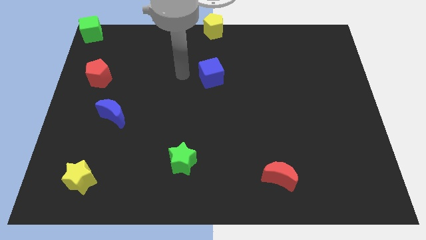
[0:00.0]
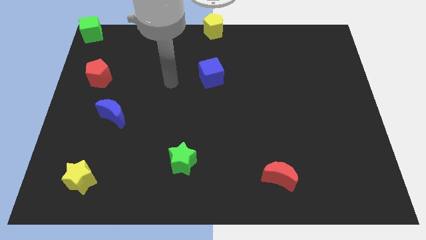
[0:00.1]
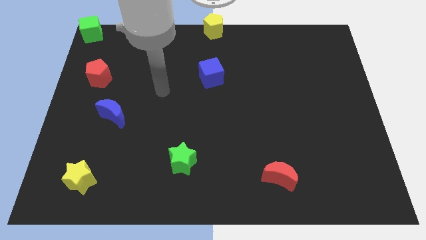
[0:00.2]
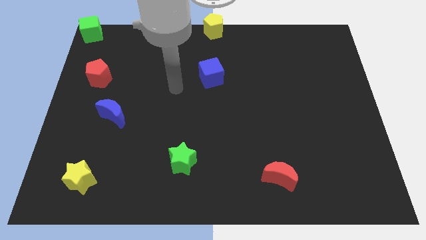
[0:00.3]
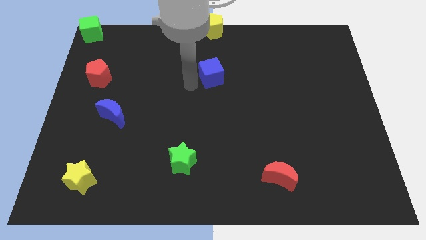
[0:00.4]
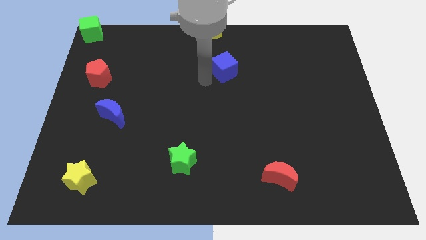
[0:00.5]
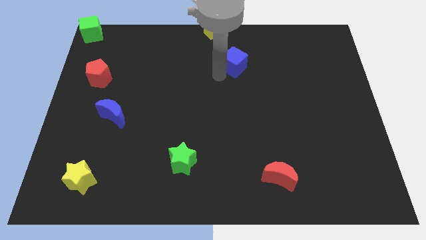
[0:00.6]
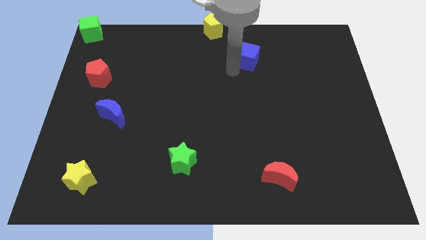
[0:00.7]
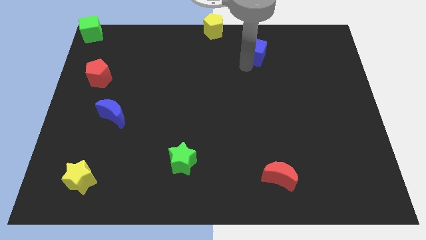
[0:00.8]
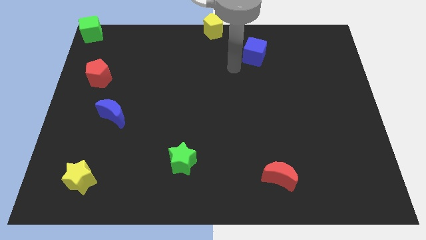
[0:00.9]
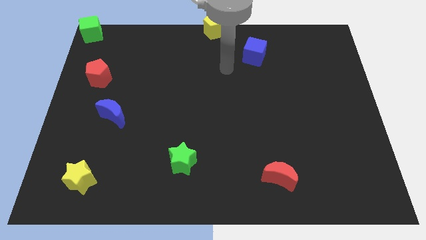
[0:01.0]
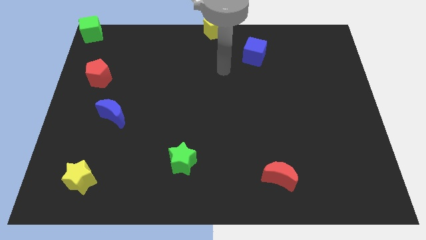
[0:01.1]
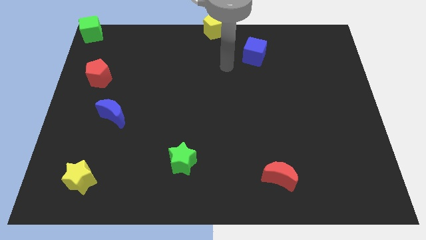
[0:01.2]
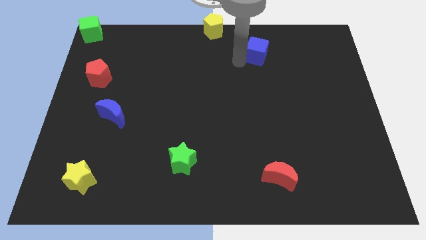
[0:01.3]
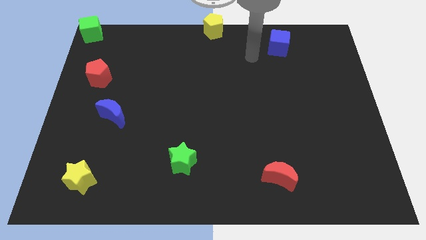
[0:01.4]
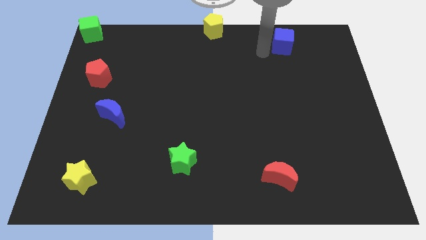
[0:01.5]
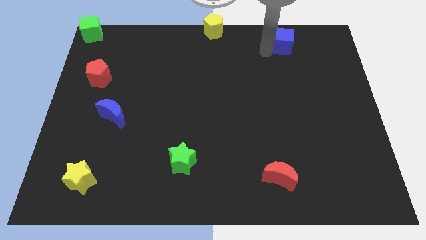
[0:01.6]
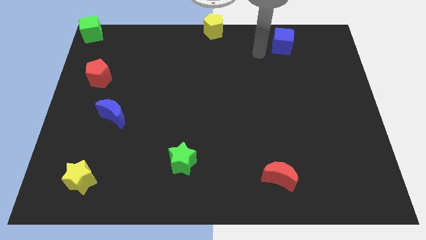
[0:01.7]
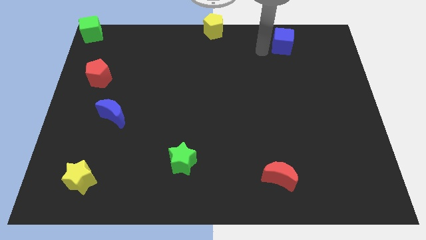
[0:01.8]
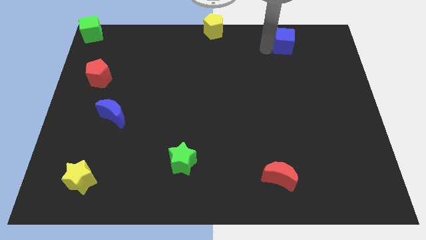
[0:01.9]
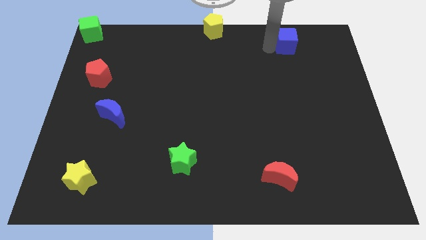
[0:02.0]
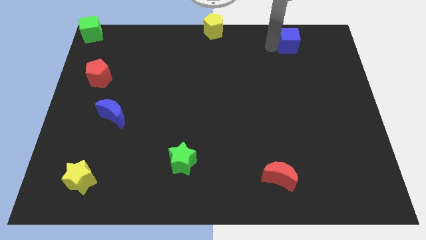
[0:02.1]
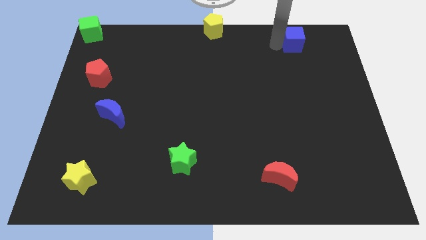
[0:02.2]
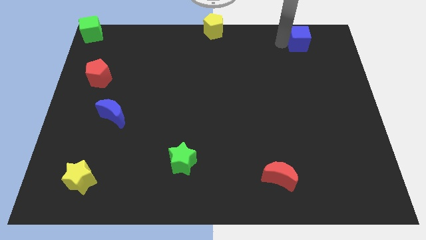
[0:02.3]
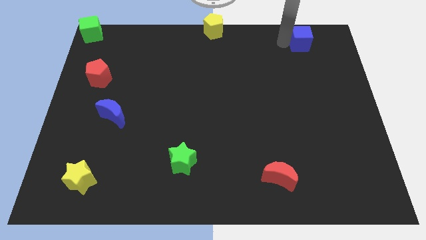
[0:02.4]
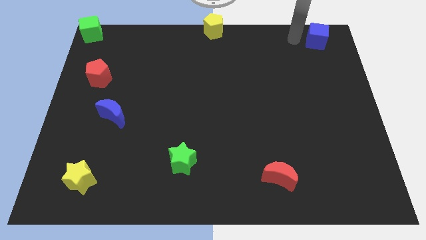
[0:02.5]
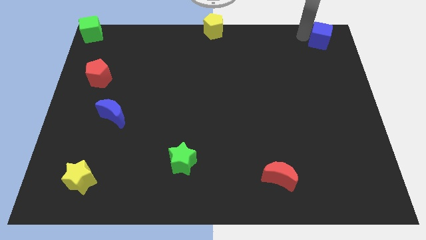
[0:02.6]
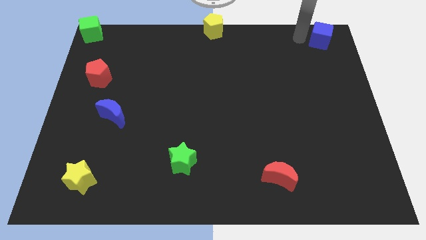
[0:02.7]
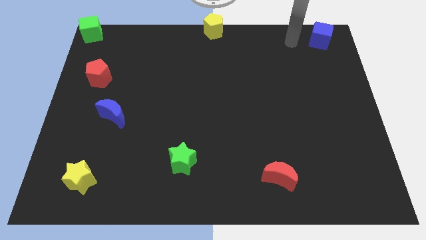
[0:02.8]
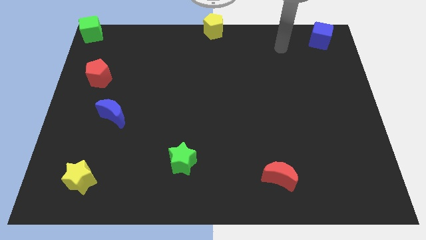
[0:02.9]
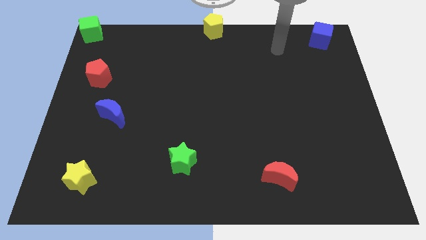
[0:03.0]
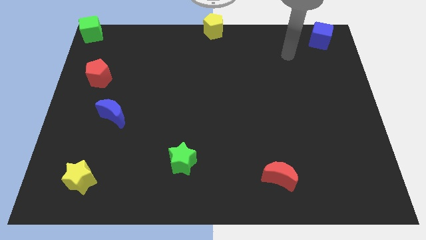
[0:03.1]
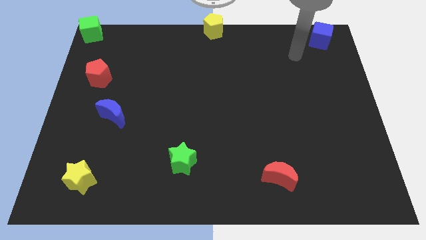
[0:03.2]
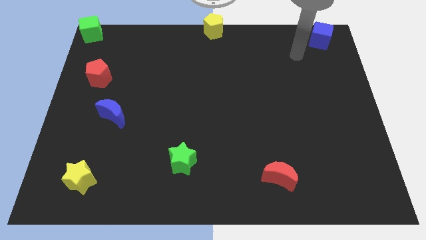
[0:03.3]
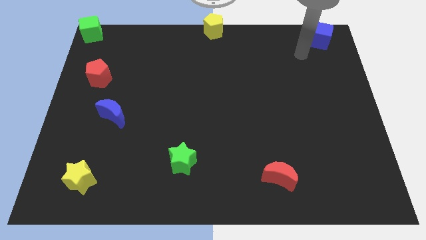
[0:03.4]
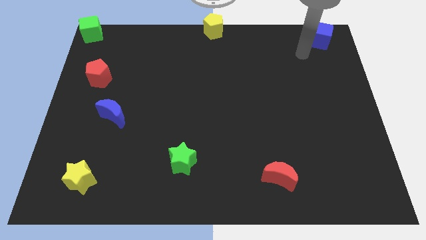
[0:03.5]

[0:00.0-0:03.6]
push the blue cube to the top right corner of the board

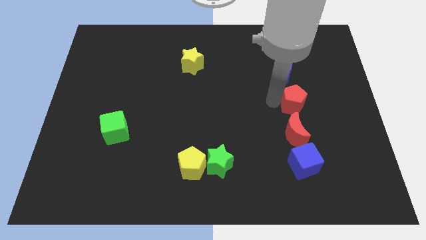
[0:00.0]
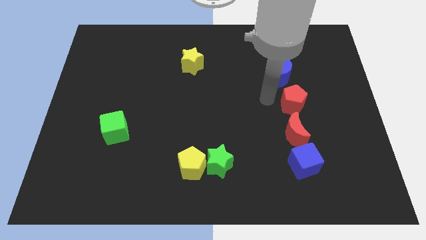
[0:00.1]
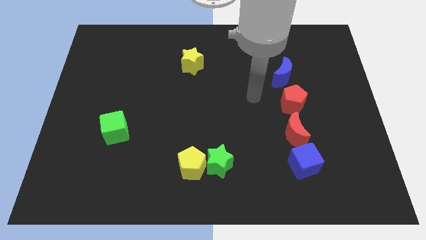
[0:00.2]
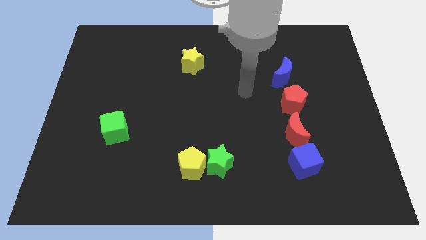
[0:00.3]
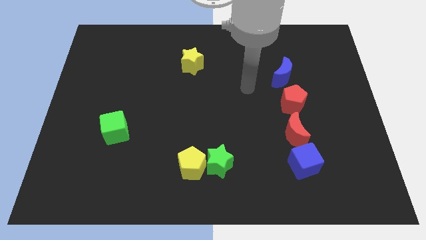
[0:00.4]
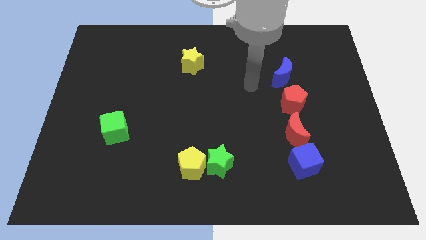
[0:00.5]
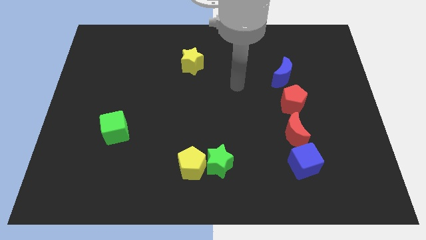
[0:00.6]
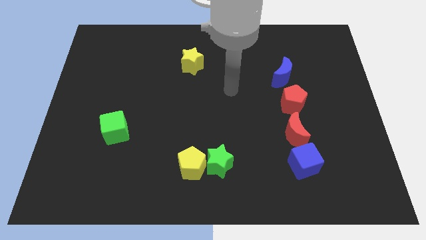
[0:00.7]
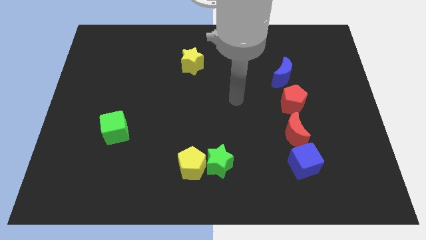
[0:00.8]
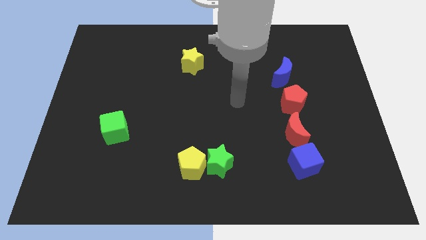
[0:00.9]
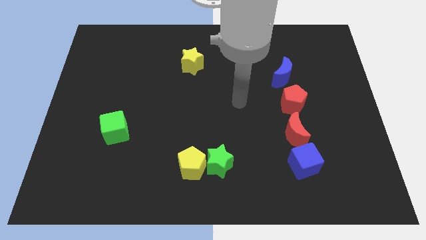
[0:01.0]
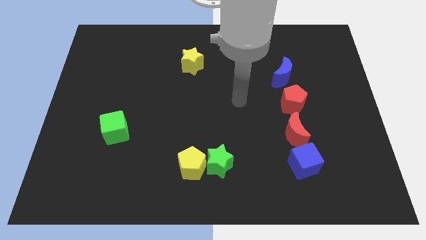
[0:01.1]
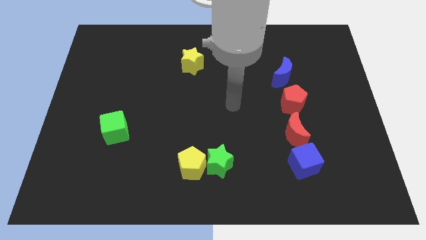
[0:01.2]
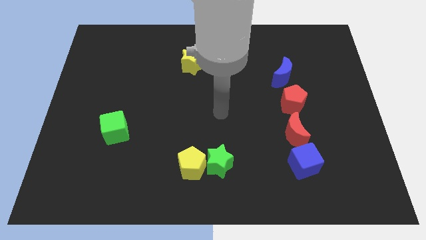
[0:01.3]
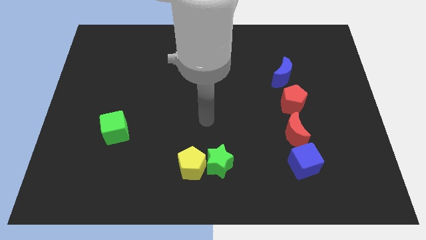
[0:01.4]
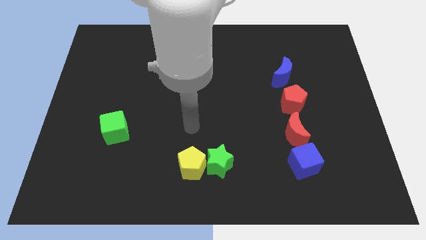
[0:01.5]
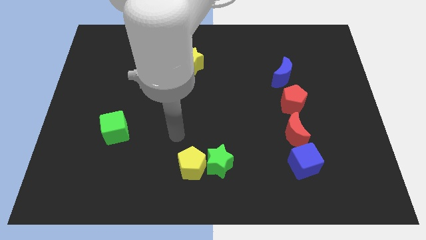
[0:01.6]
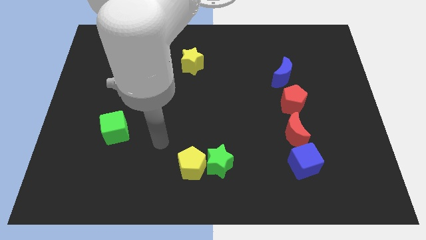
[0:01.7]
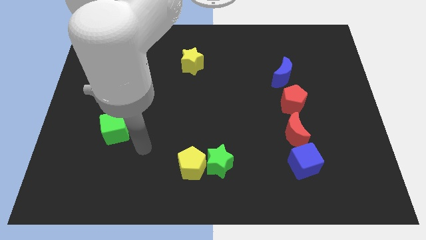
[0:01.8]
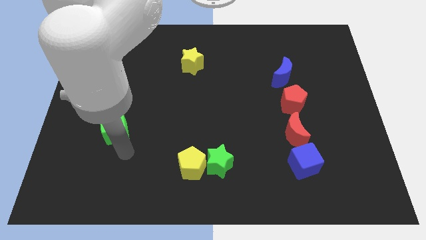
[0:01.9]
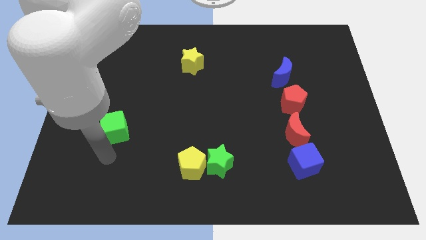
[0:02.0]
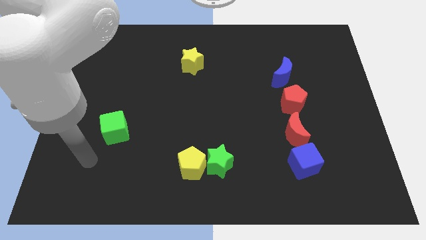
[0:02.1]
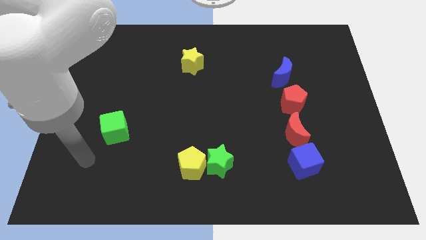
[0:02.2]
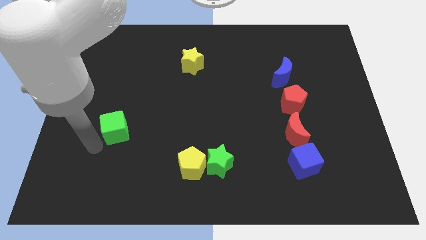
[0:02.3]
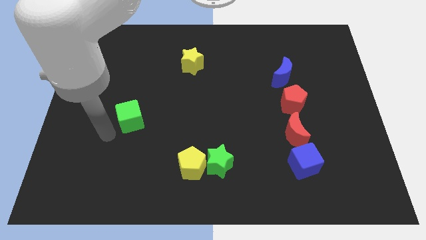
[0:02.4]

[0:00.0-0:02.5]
point the arm to the left bottom of the green cube

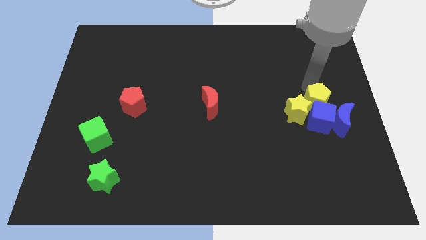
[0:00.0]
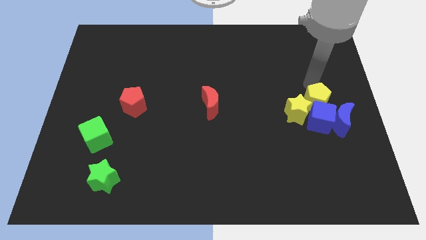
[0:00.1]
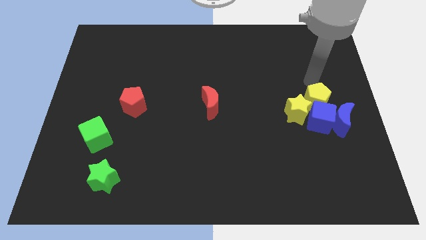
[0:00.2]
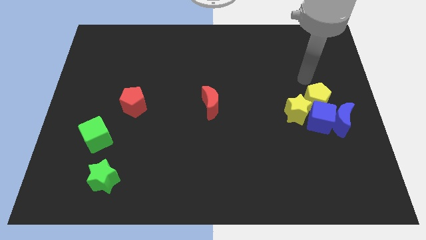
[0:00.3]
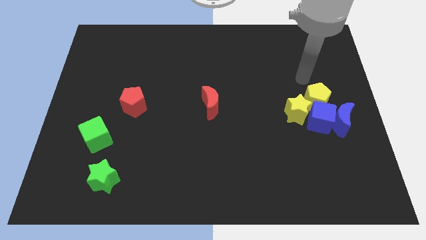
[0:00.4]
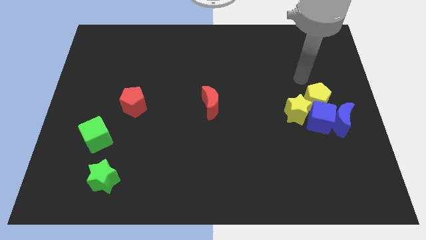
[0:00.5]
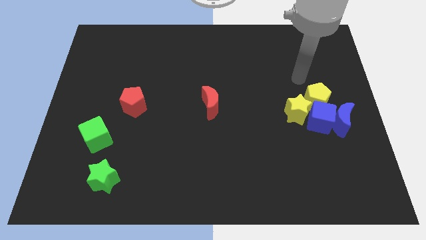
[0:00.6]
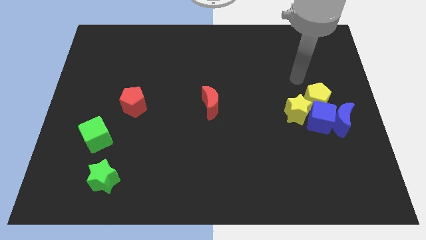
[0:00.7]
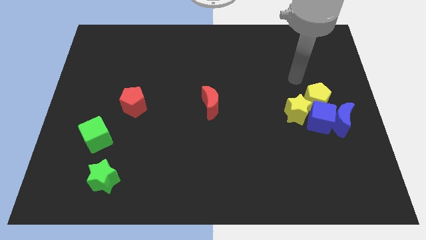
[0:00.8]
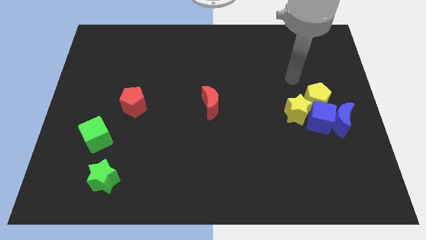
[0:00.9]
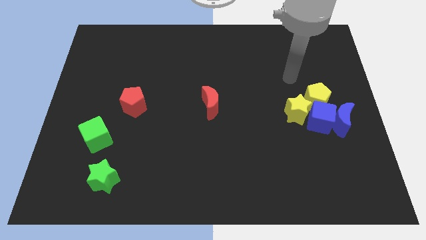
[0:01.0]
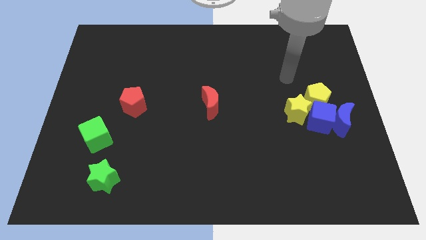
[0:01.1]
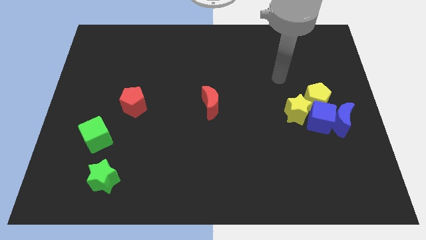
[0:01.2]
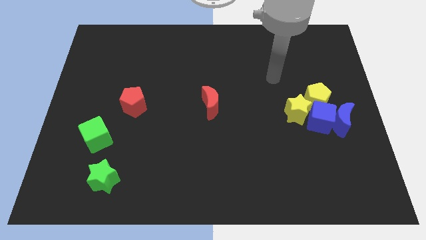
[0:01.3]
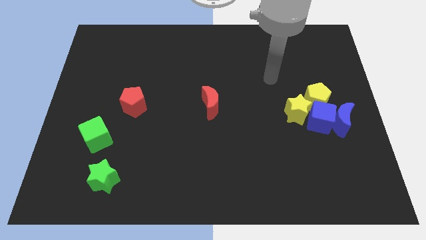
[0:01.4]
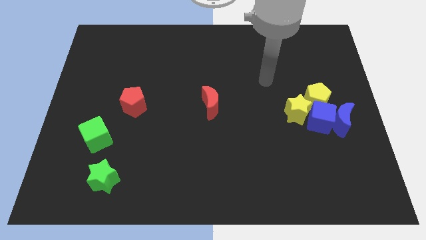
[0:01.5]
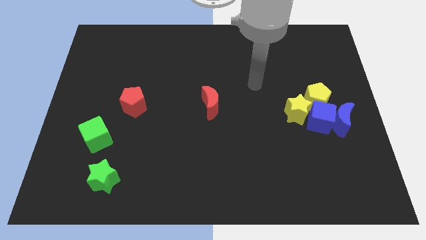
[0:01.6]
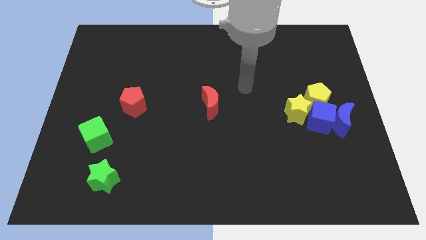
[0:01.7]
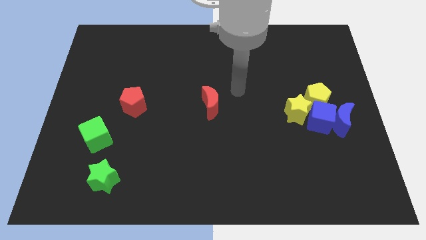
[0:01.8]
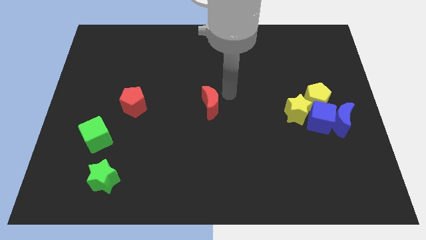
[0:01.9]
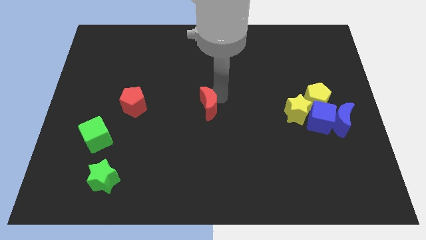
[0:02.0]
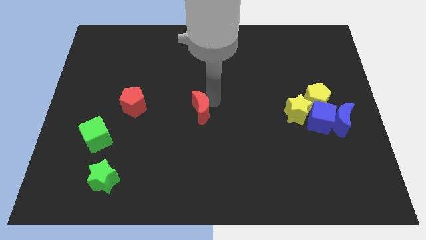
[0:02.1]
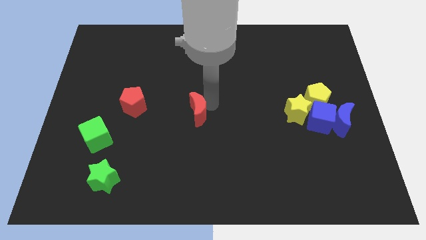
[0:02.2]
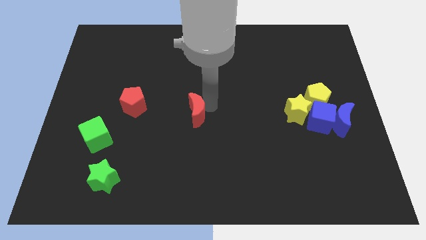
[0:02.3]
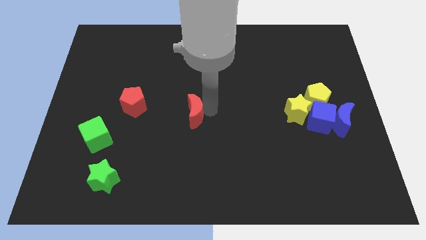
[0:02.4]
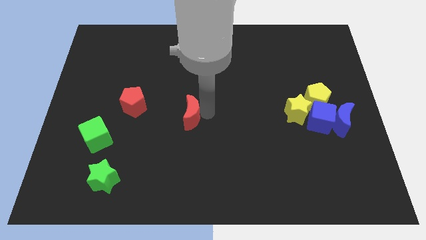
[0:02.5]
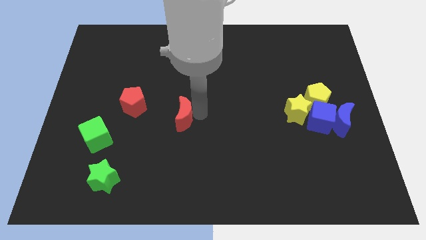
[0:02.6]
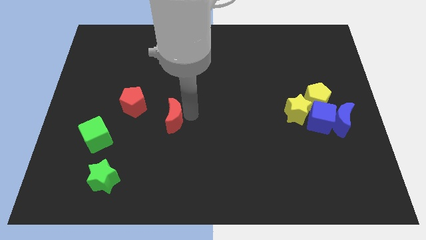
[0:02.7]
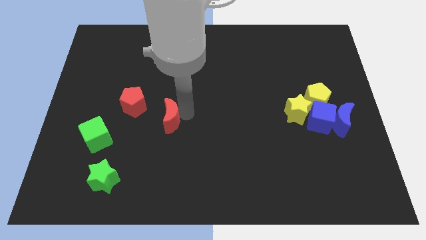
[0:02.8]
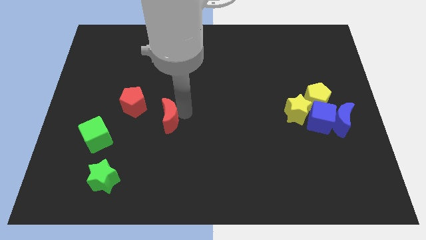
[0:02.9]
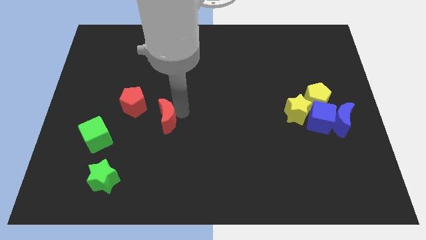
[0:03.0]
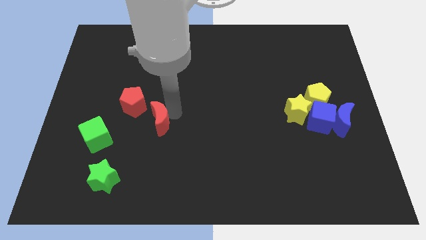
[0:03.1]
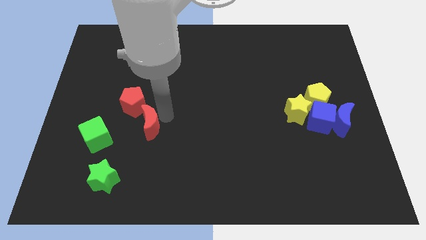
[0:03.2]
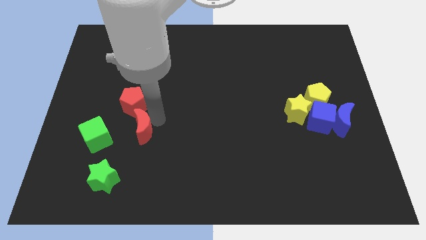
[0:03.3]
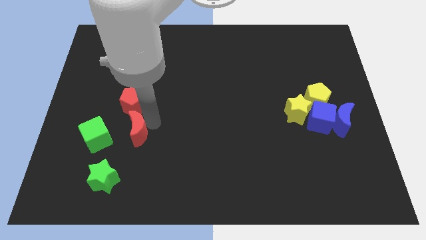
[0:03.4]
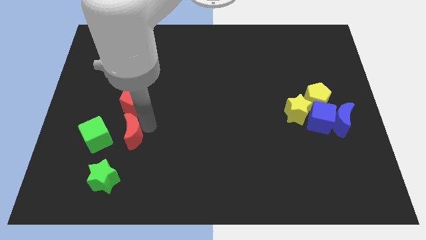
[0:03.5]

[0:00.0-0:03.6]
push the red crescent parallel to the right of the green cube
